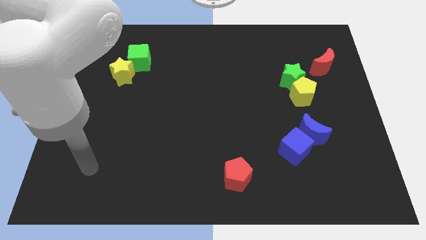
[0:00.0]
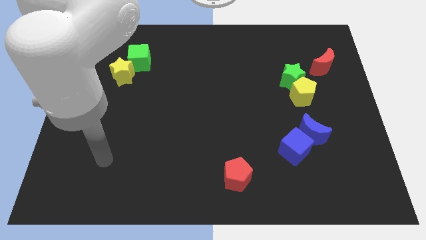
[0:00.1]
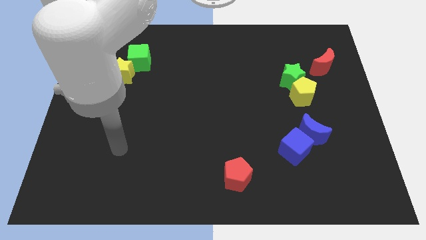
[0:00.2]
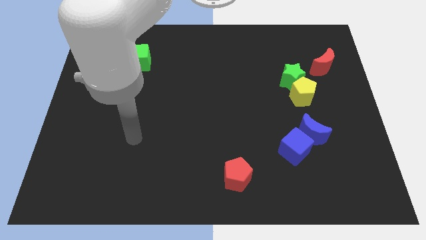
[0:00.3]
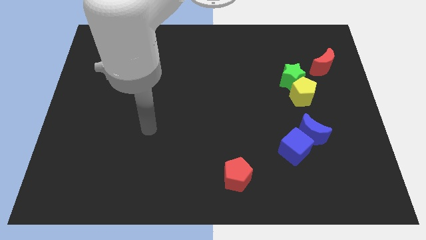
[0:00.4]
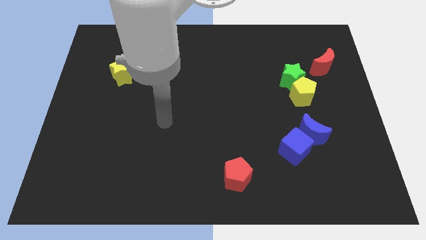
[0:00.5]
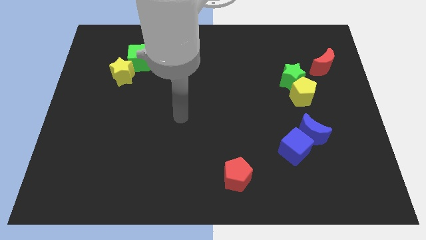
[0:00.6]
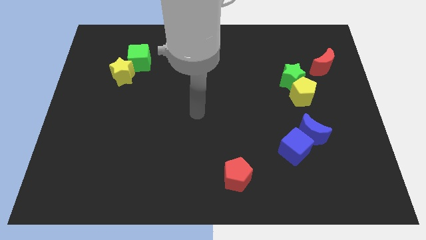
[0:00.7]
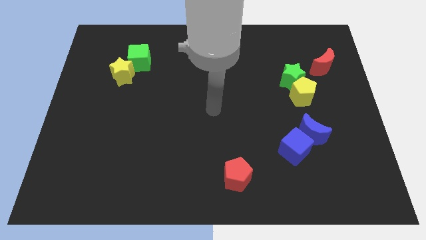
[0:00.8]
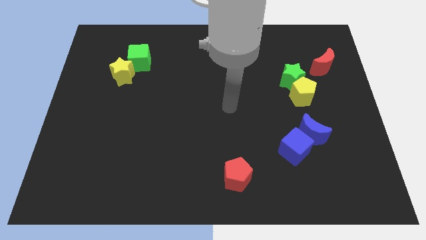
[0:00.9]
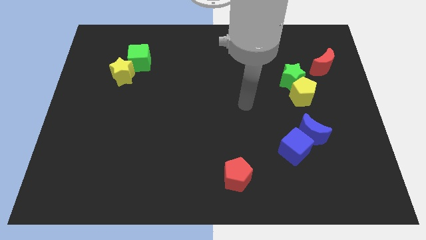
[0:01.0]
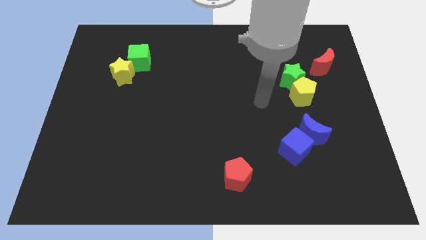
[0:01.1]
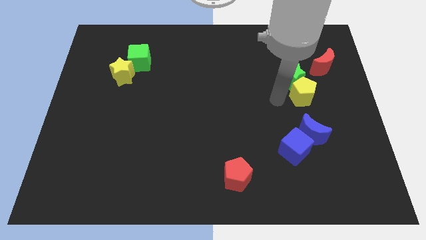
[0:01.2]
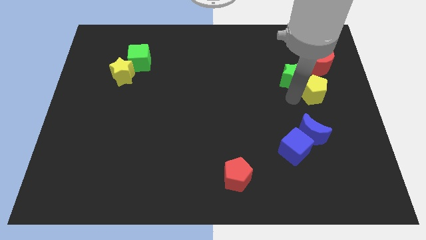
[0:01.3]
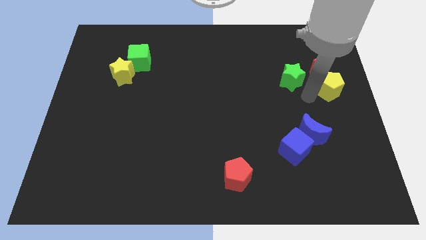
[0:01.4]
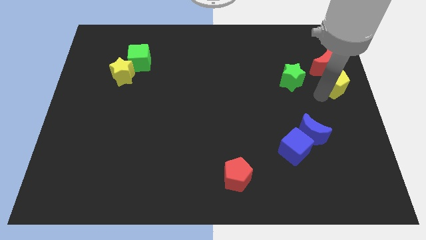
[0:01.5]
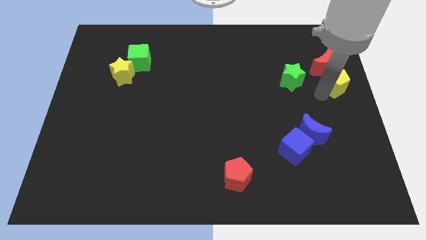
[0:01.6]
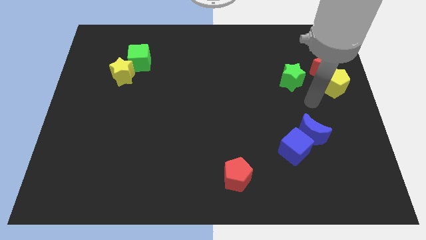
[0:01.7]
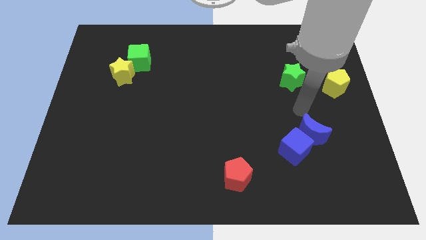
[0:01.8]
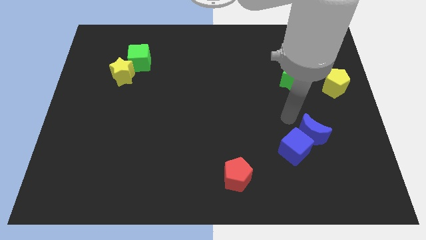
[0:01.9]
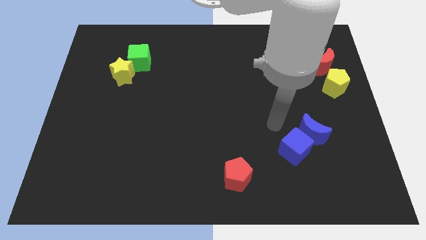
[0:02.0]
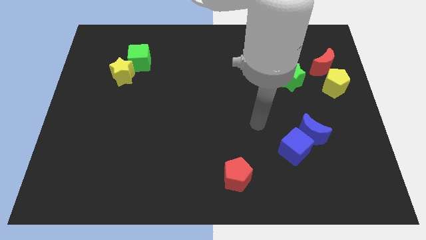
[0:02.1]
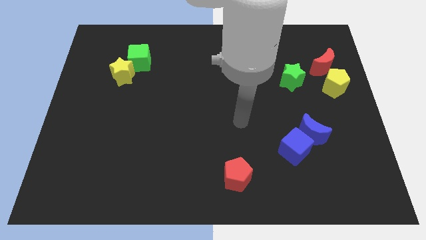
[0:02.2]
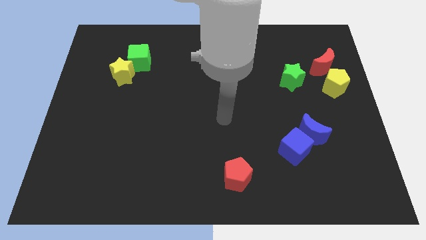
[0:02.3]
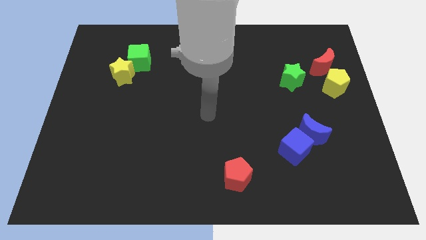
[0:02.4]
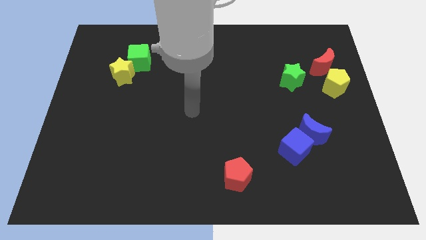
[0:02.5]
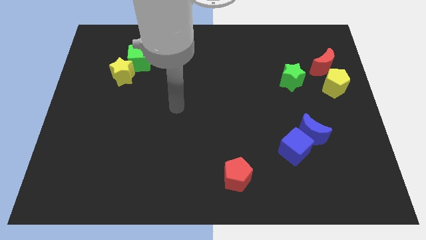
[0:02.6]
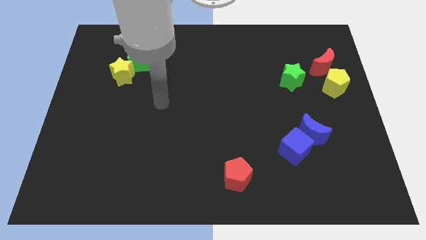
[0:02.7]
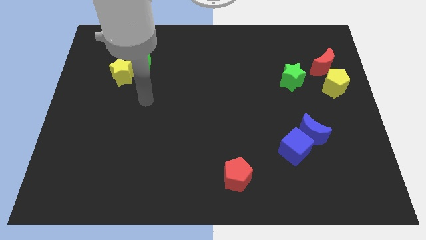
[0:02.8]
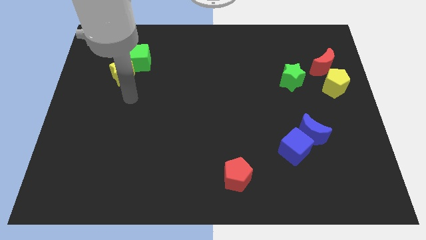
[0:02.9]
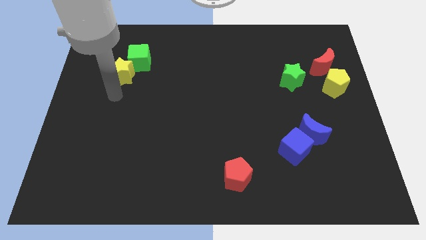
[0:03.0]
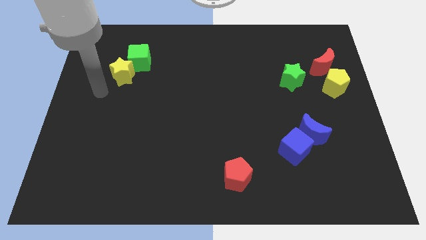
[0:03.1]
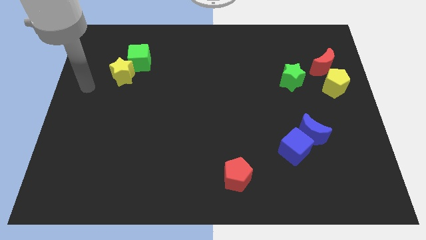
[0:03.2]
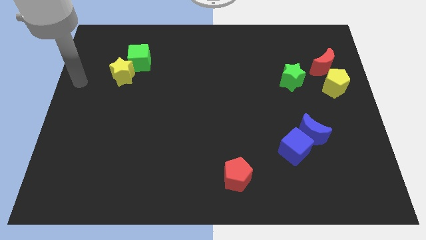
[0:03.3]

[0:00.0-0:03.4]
push yellow pentagon slightly towards up

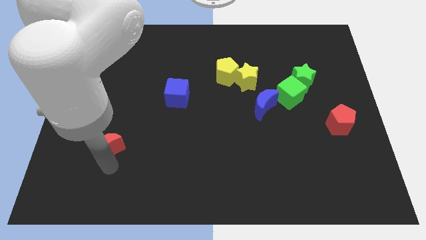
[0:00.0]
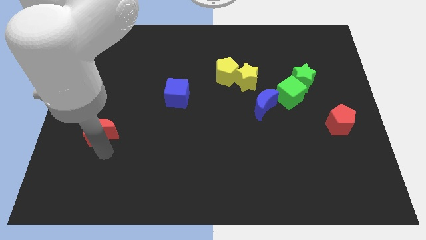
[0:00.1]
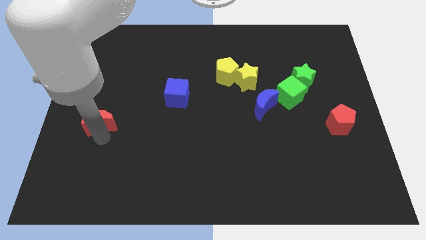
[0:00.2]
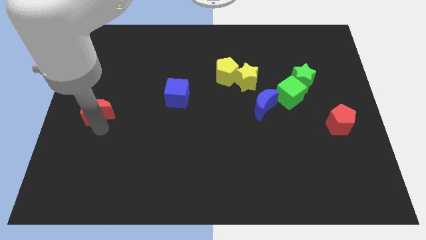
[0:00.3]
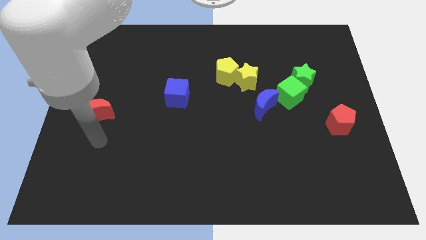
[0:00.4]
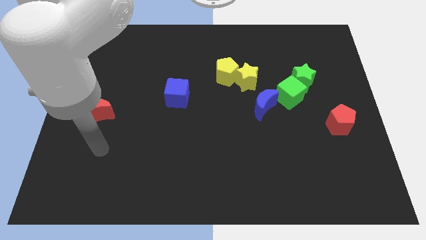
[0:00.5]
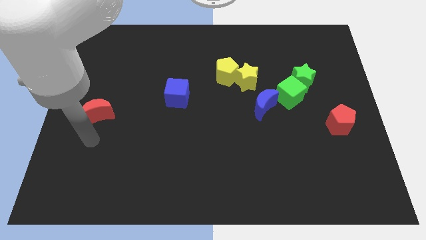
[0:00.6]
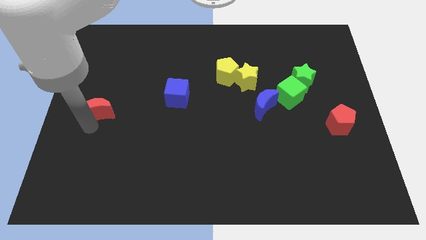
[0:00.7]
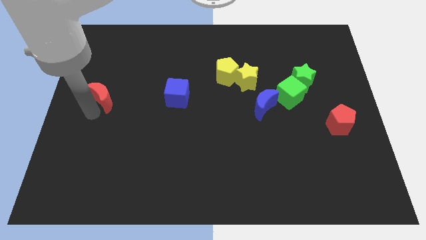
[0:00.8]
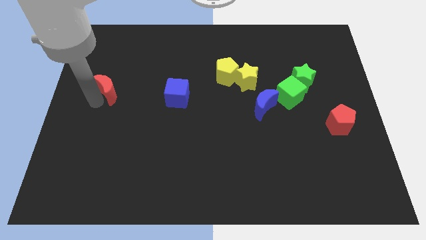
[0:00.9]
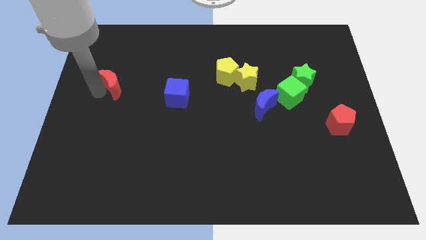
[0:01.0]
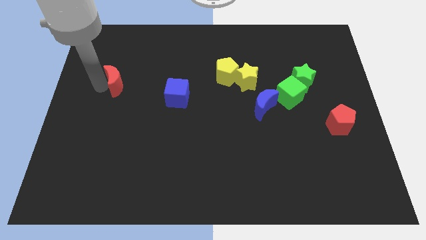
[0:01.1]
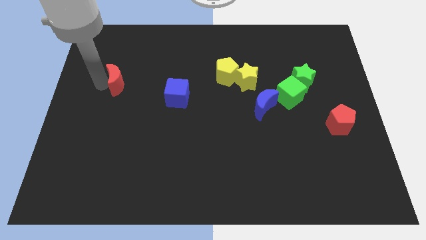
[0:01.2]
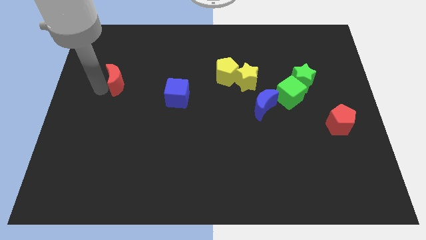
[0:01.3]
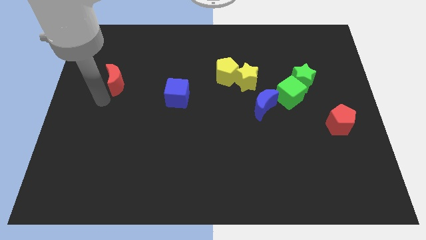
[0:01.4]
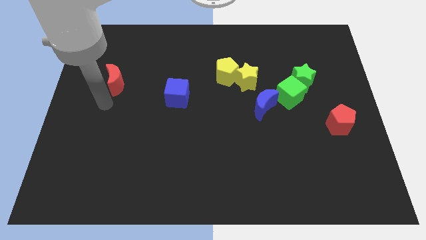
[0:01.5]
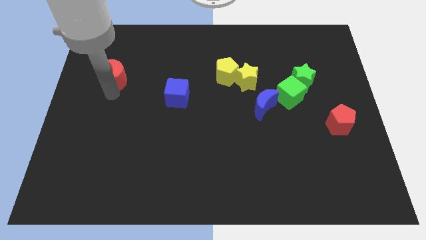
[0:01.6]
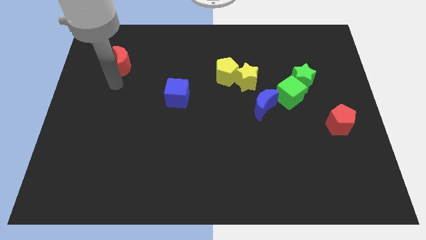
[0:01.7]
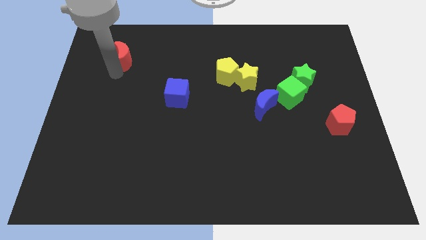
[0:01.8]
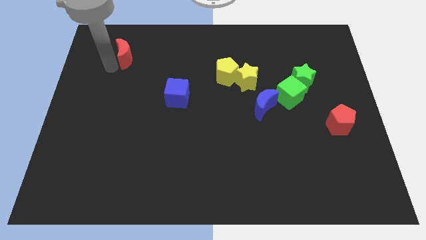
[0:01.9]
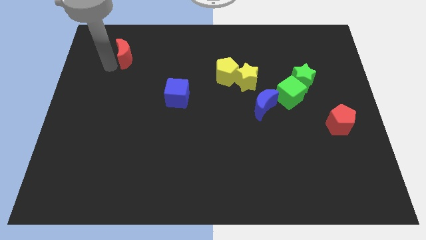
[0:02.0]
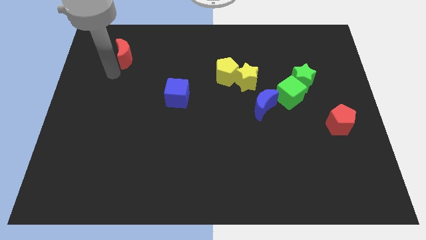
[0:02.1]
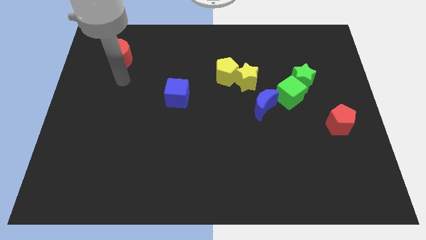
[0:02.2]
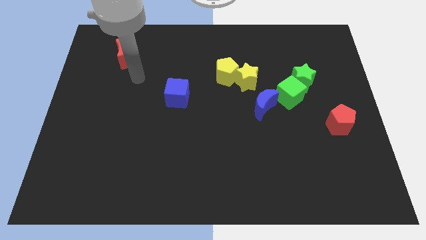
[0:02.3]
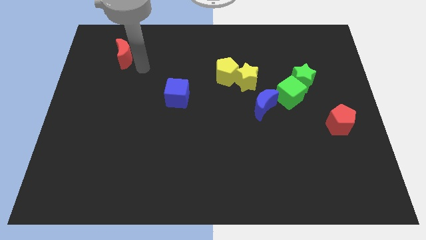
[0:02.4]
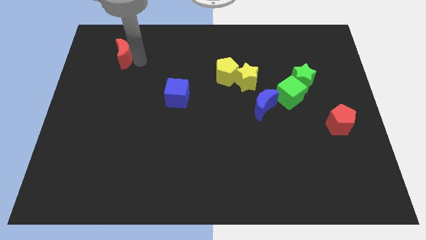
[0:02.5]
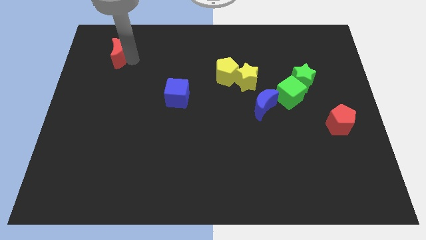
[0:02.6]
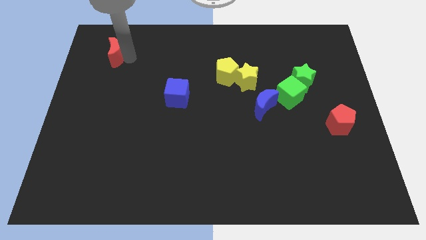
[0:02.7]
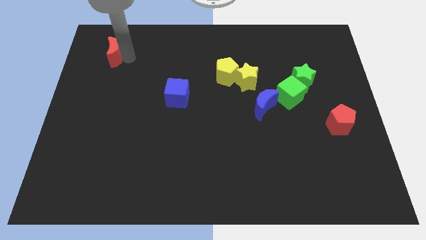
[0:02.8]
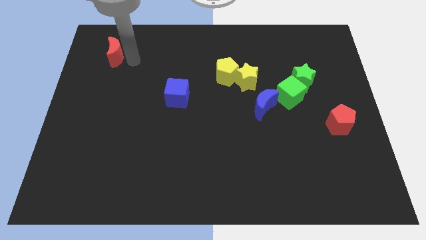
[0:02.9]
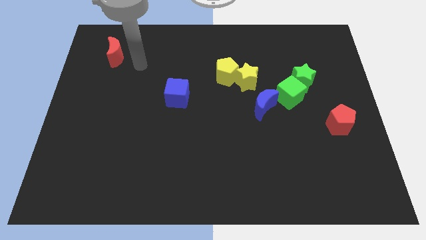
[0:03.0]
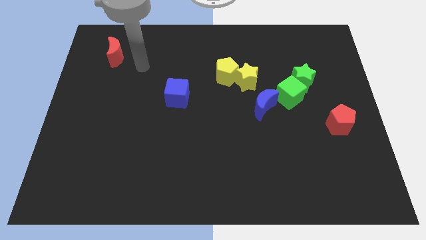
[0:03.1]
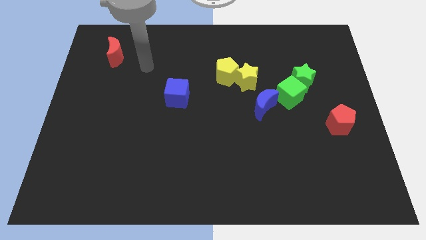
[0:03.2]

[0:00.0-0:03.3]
place the red moon diagonally to blue cube

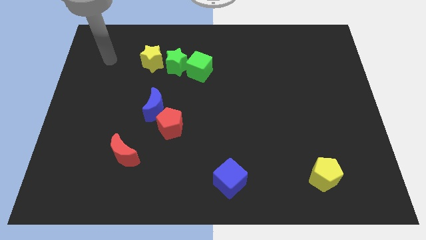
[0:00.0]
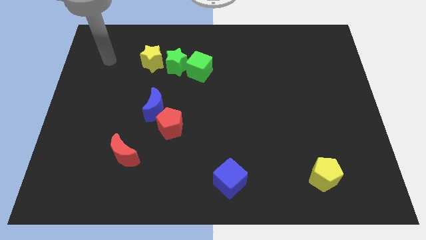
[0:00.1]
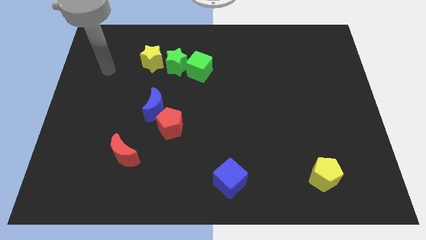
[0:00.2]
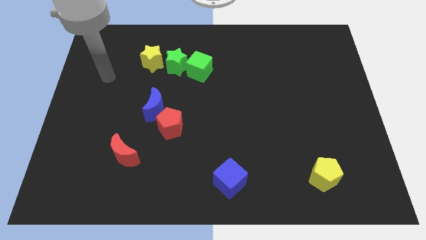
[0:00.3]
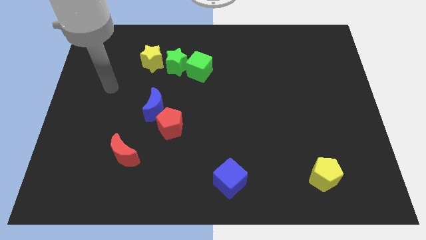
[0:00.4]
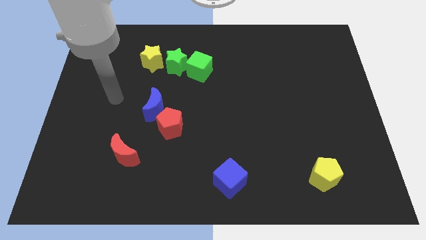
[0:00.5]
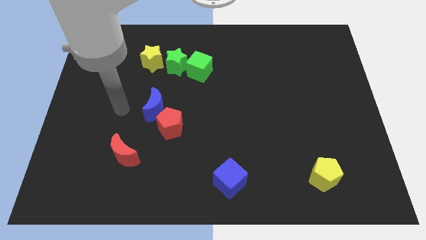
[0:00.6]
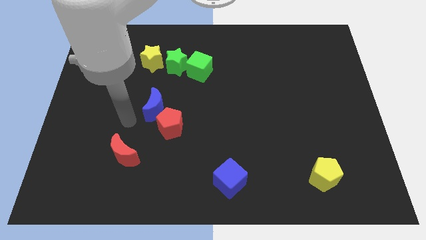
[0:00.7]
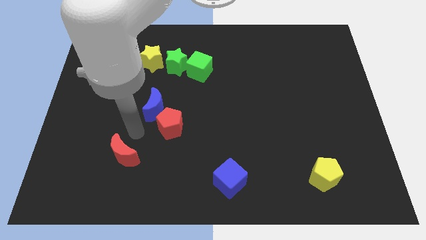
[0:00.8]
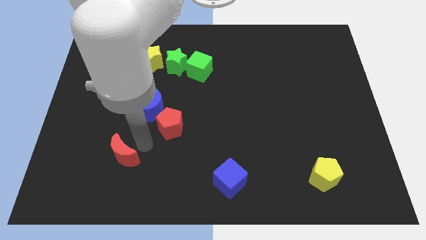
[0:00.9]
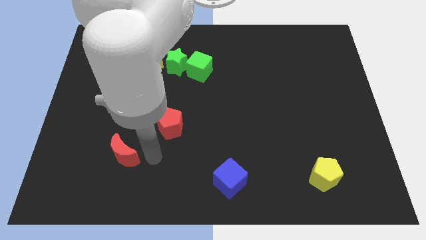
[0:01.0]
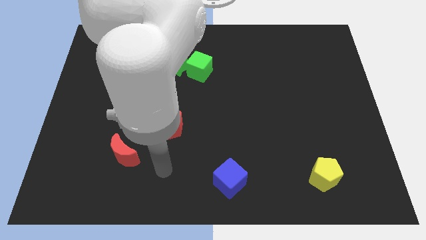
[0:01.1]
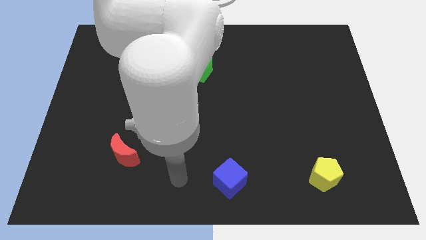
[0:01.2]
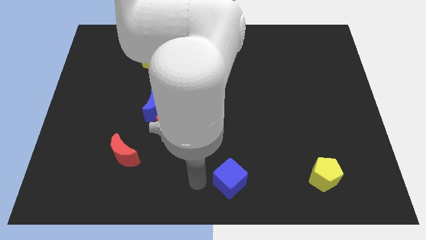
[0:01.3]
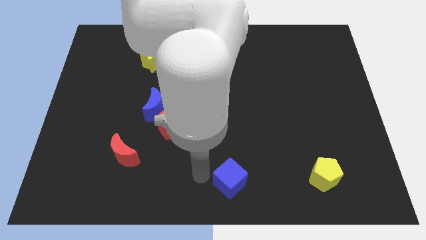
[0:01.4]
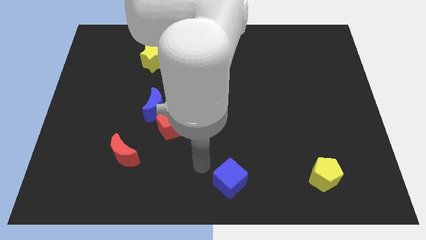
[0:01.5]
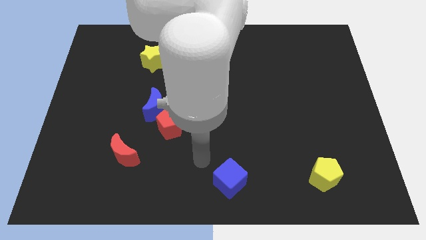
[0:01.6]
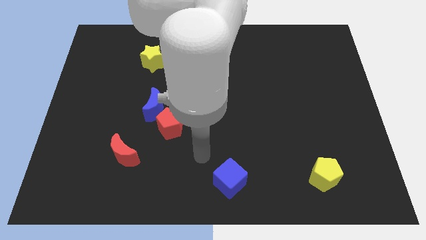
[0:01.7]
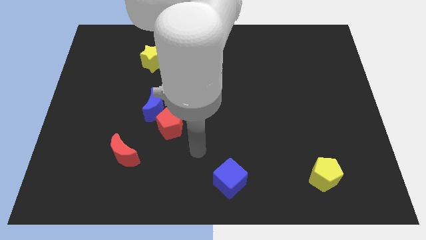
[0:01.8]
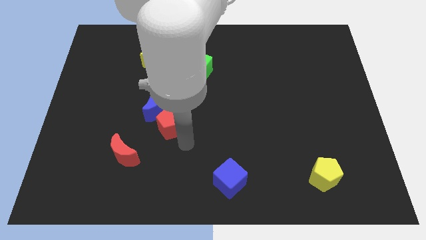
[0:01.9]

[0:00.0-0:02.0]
move the arm close to the red crescent

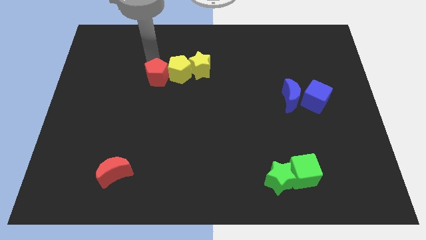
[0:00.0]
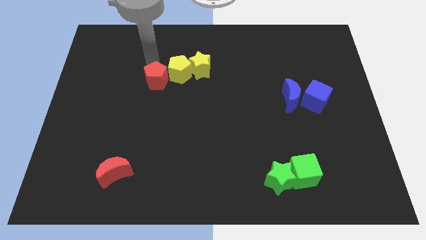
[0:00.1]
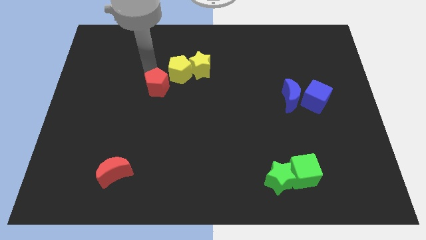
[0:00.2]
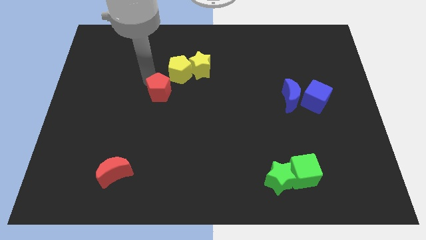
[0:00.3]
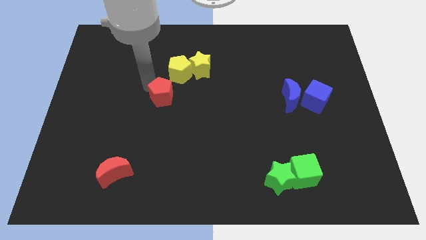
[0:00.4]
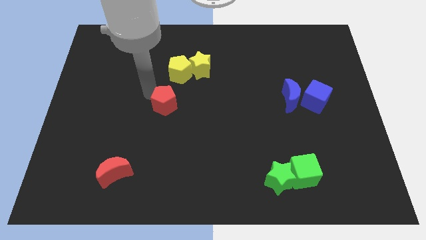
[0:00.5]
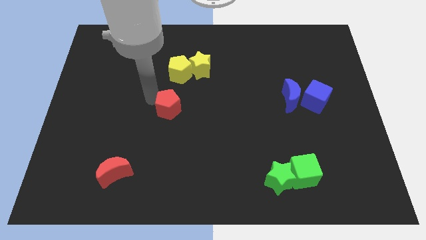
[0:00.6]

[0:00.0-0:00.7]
move the red pentagon to the center of the board
